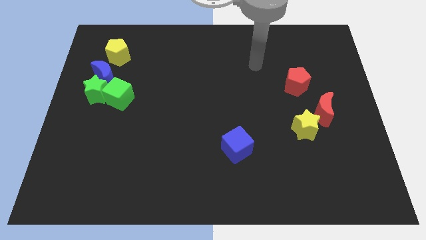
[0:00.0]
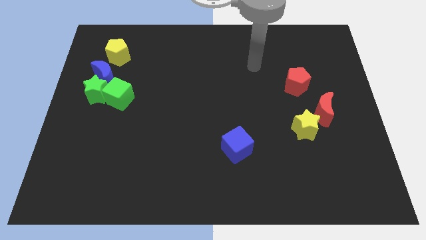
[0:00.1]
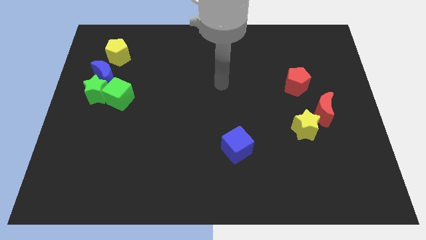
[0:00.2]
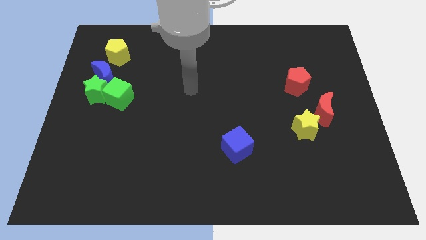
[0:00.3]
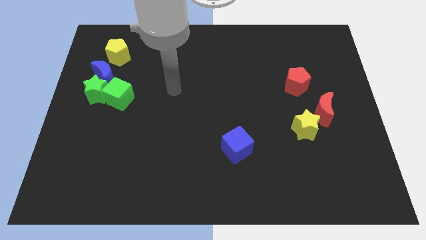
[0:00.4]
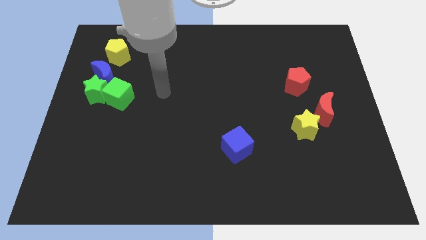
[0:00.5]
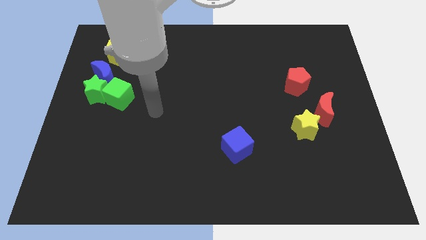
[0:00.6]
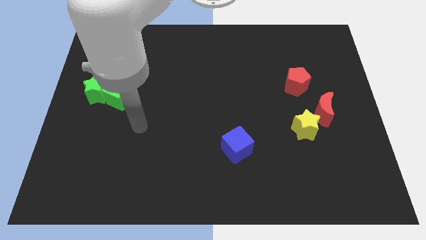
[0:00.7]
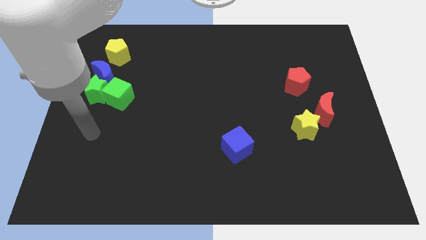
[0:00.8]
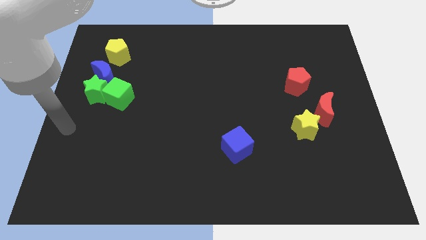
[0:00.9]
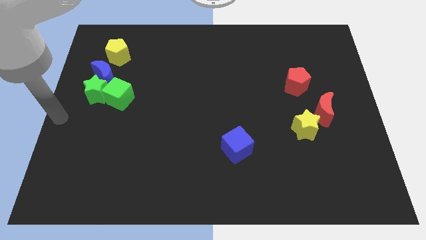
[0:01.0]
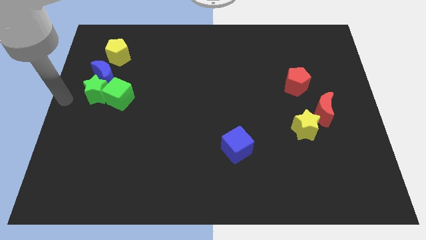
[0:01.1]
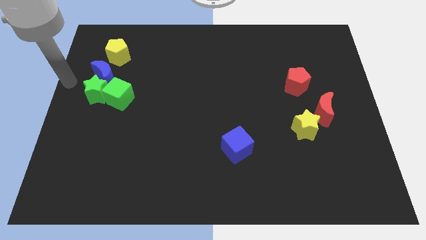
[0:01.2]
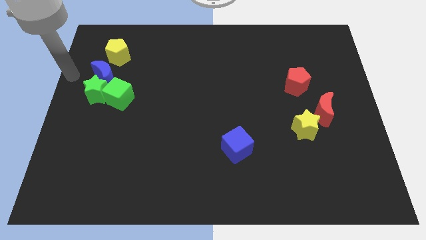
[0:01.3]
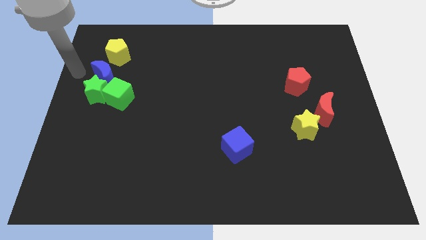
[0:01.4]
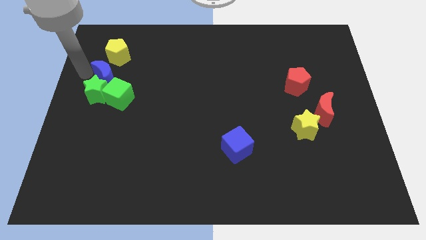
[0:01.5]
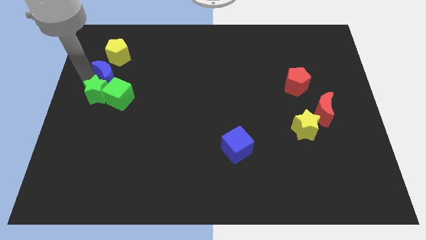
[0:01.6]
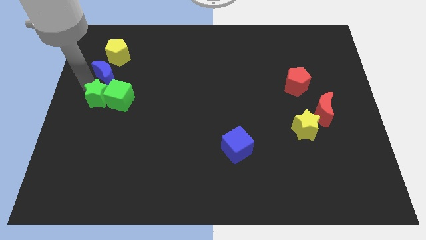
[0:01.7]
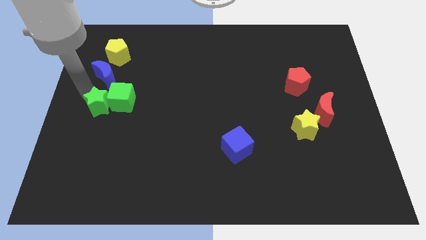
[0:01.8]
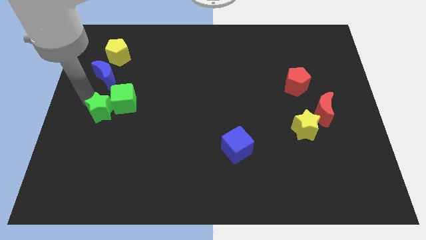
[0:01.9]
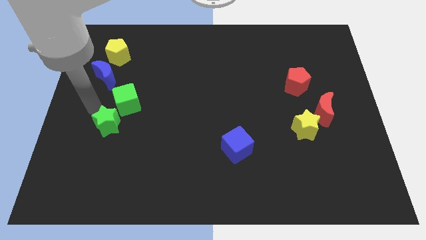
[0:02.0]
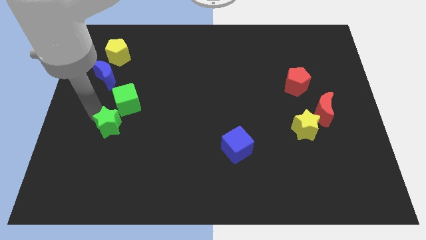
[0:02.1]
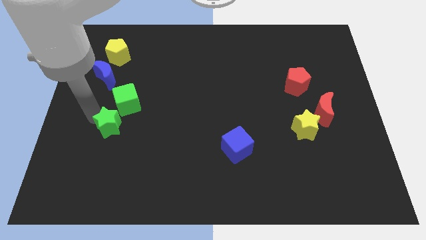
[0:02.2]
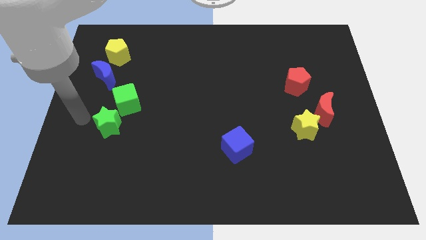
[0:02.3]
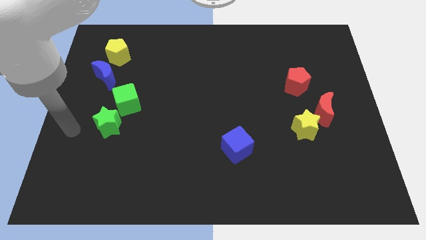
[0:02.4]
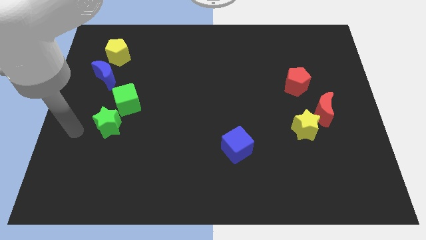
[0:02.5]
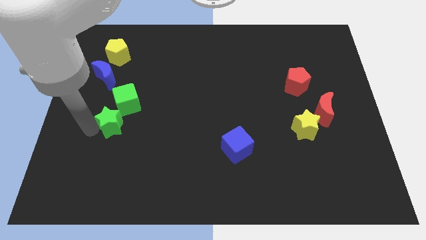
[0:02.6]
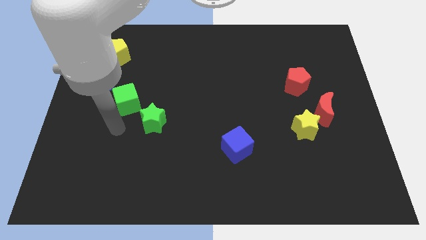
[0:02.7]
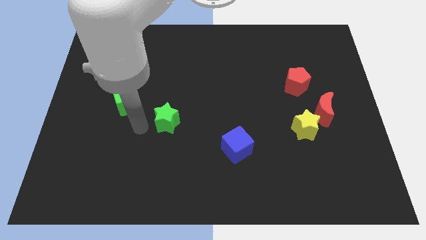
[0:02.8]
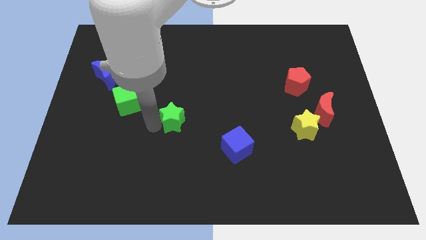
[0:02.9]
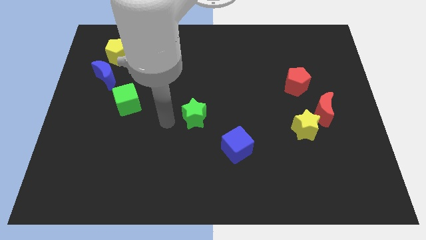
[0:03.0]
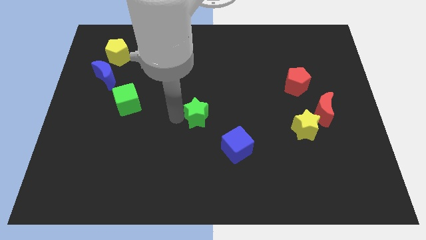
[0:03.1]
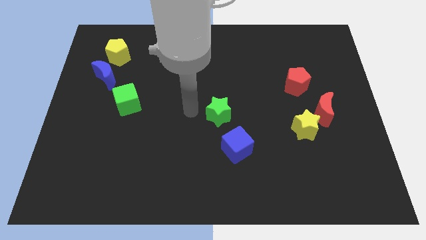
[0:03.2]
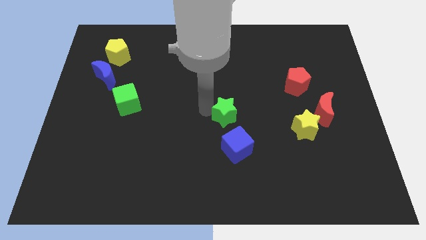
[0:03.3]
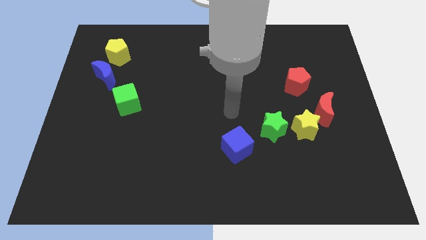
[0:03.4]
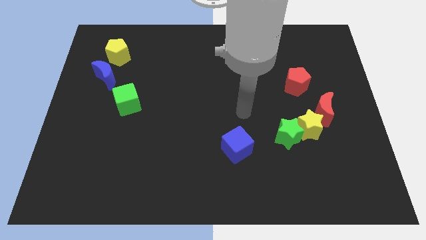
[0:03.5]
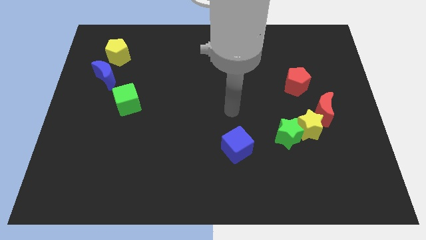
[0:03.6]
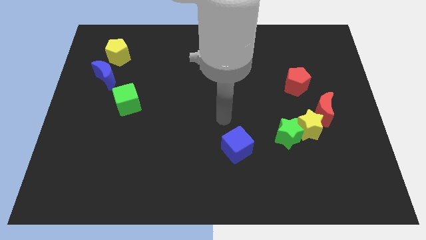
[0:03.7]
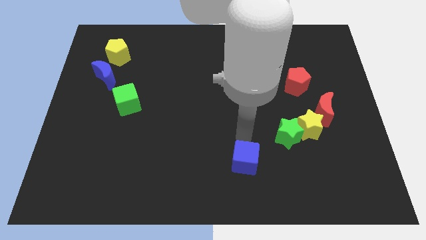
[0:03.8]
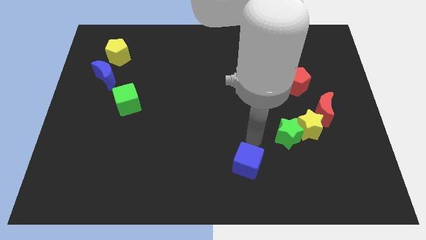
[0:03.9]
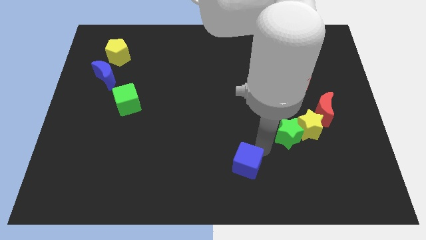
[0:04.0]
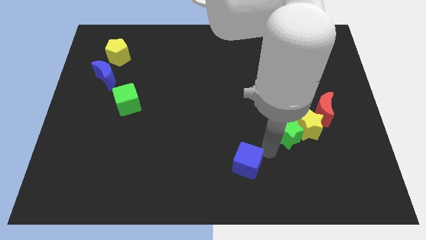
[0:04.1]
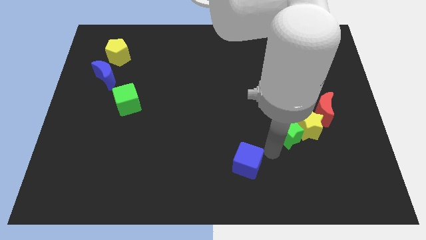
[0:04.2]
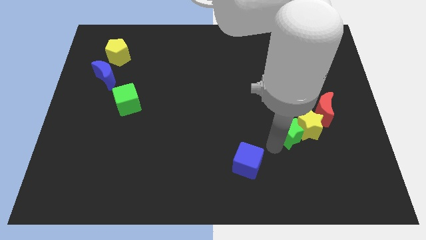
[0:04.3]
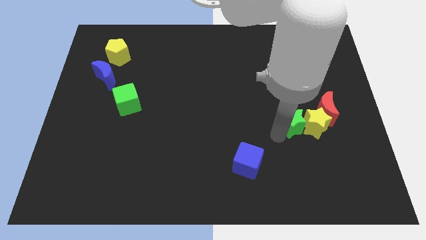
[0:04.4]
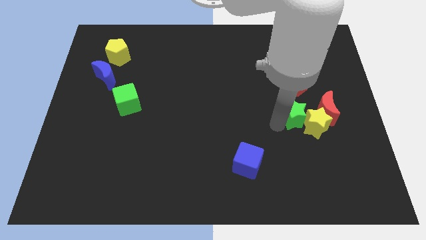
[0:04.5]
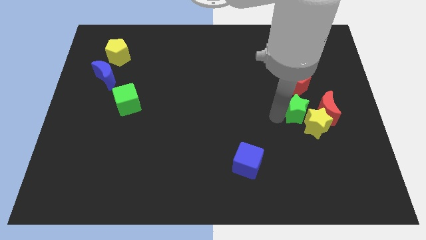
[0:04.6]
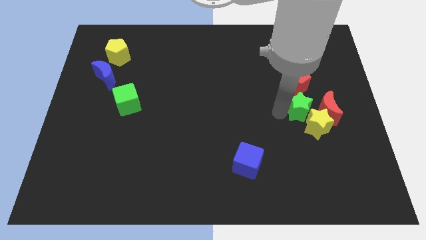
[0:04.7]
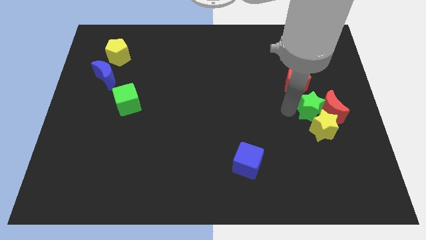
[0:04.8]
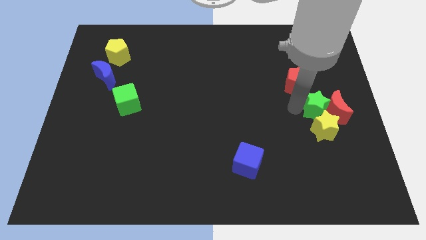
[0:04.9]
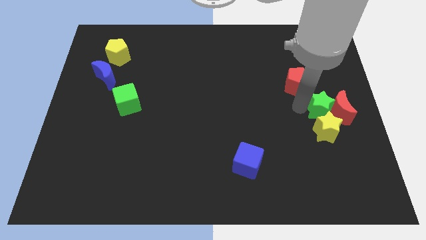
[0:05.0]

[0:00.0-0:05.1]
slide the green star next to the red moon

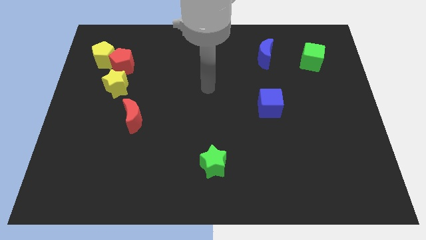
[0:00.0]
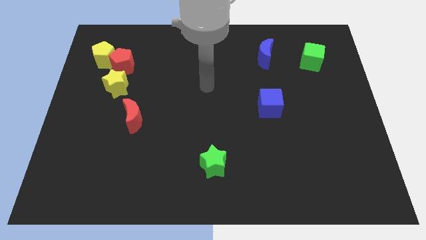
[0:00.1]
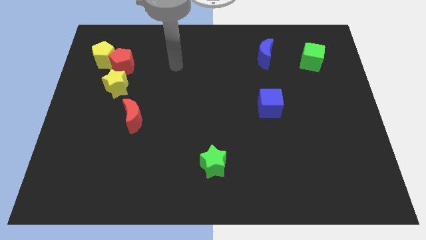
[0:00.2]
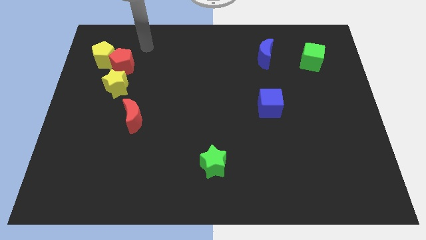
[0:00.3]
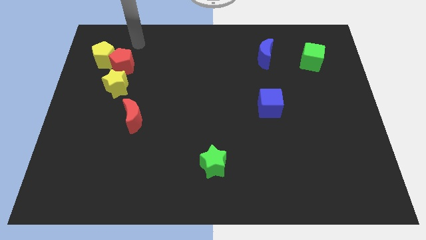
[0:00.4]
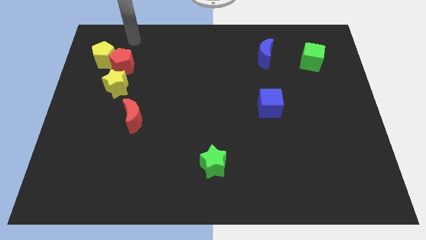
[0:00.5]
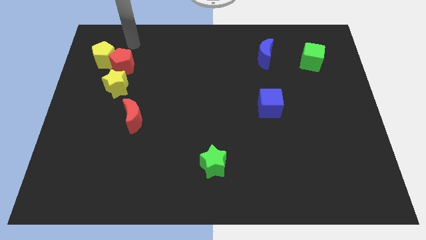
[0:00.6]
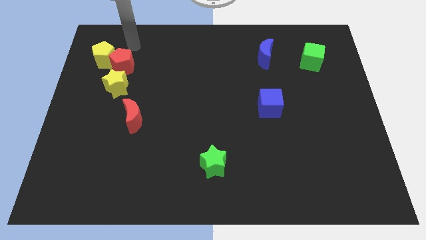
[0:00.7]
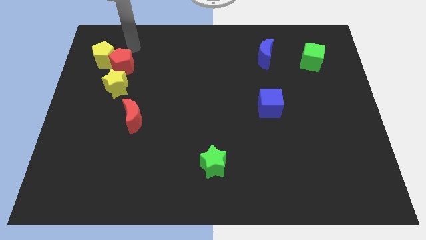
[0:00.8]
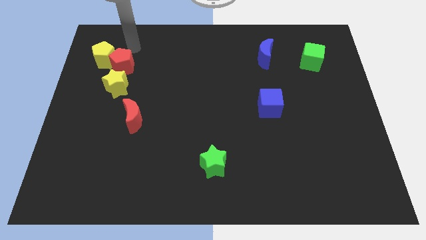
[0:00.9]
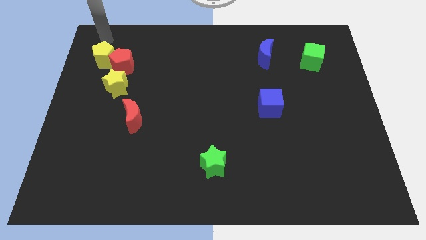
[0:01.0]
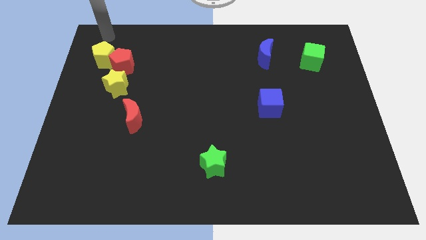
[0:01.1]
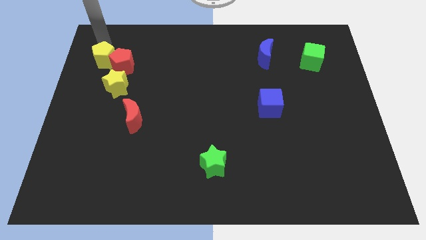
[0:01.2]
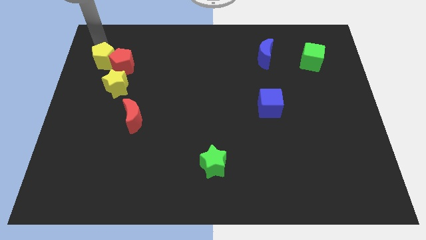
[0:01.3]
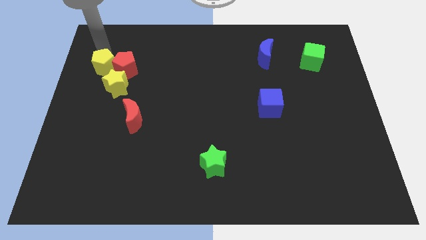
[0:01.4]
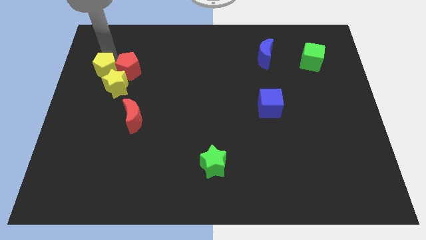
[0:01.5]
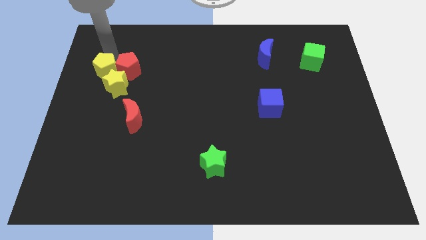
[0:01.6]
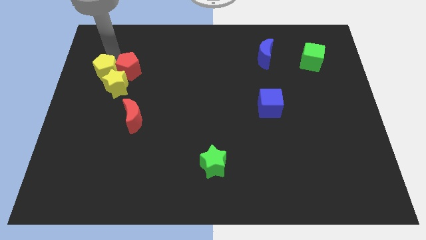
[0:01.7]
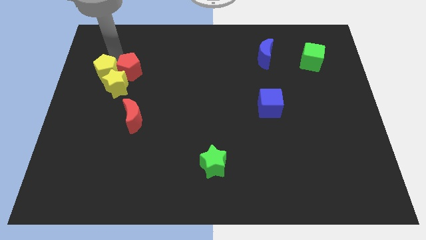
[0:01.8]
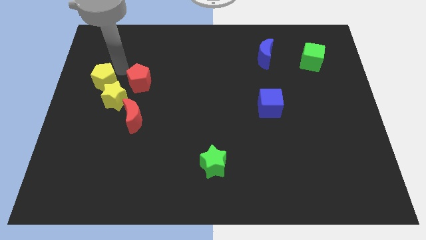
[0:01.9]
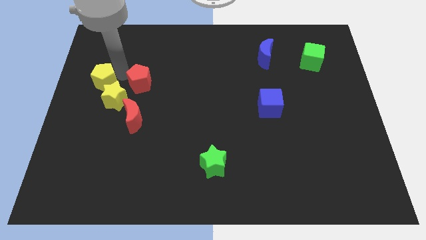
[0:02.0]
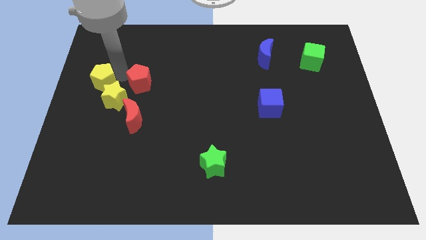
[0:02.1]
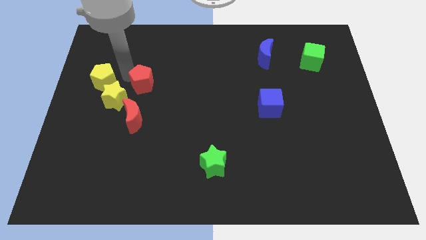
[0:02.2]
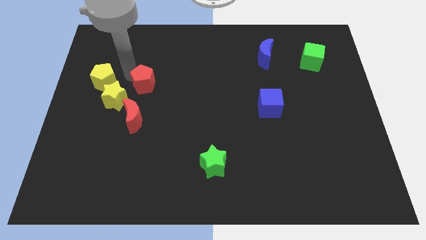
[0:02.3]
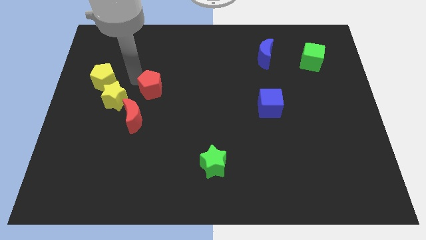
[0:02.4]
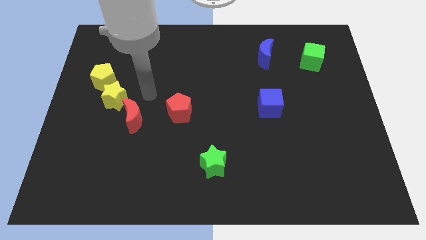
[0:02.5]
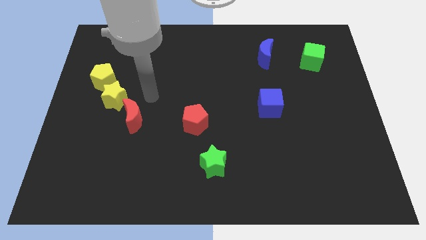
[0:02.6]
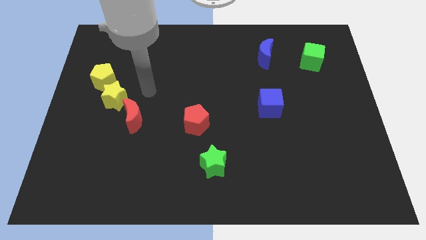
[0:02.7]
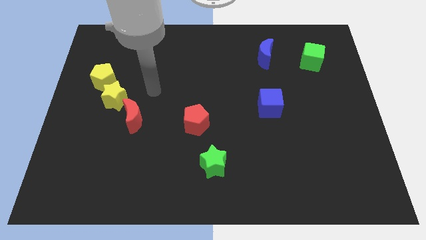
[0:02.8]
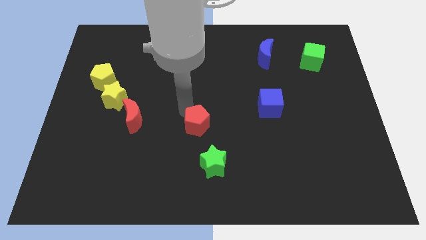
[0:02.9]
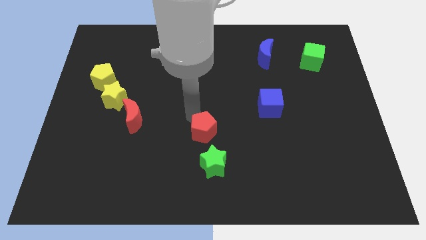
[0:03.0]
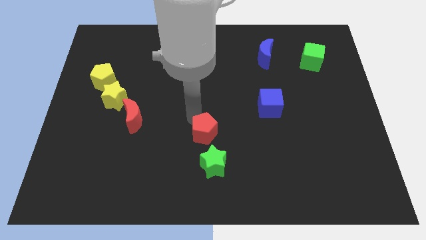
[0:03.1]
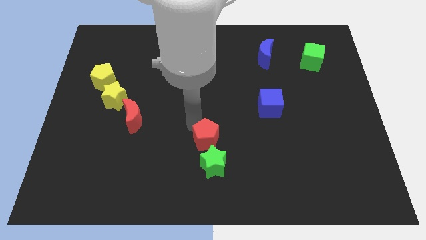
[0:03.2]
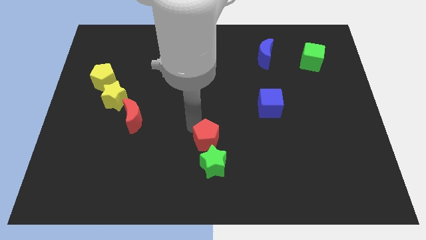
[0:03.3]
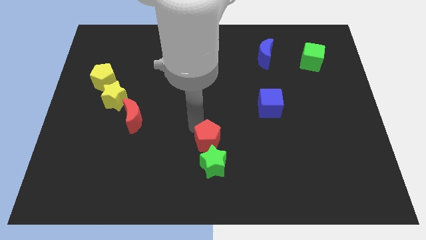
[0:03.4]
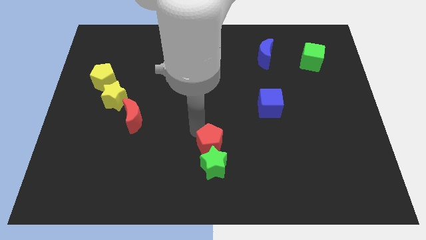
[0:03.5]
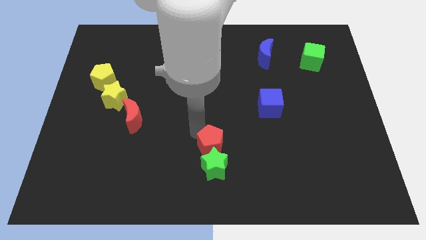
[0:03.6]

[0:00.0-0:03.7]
push the red pentagon towards the green star
